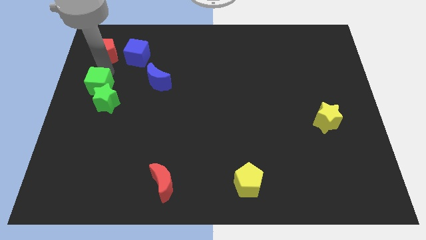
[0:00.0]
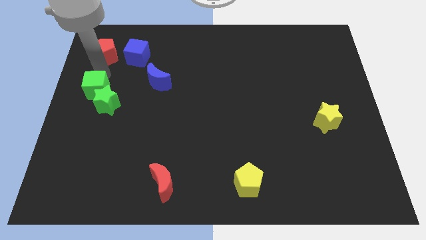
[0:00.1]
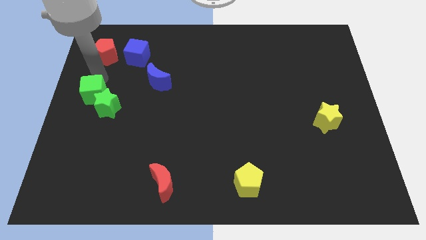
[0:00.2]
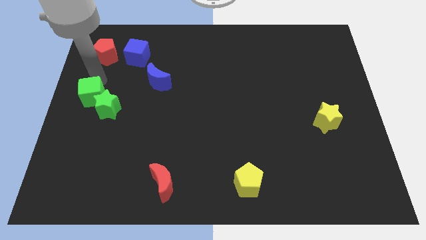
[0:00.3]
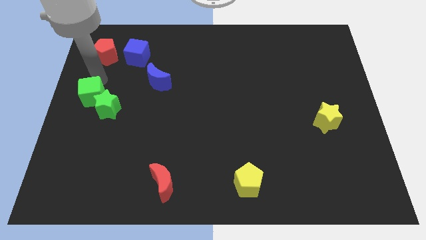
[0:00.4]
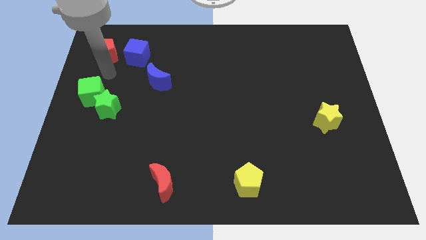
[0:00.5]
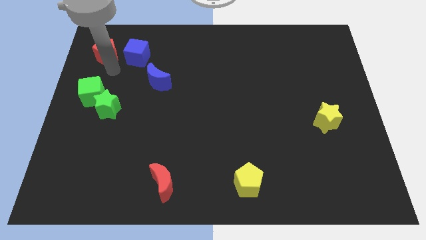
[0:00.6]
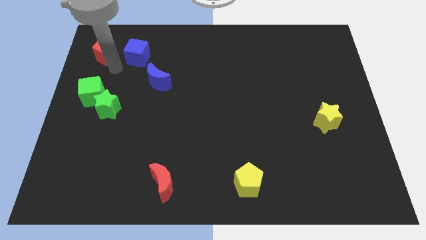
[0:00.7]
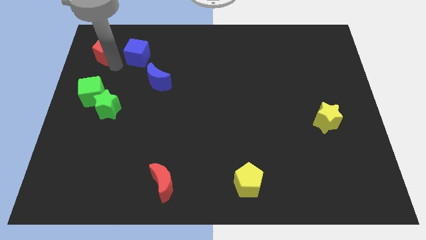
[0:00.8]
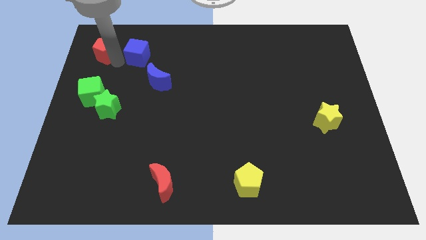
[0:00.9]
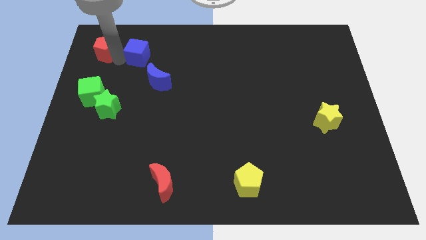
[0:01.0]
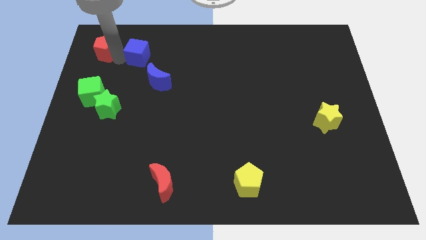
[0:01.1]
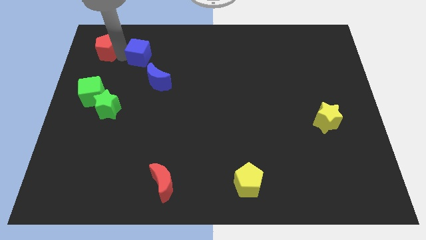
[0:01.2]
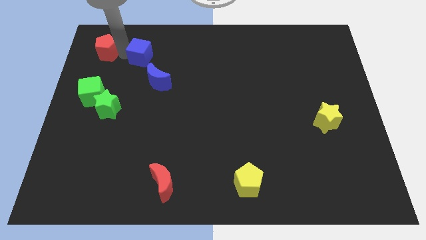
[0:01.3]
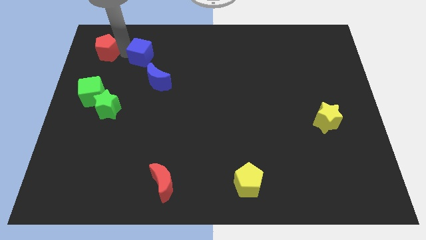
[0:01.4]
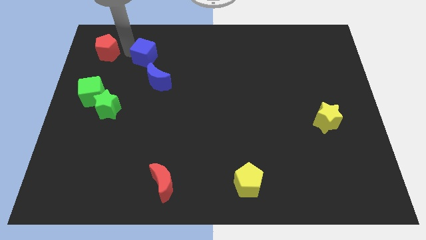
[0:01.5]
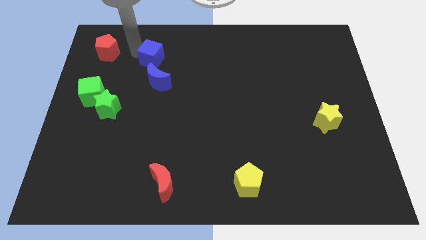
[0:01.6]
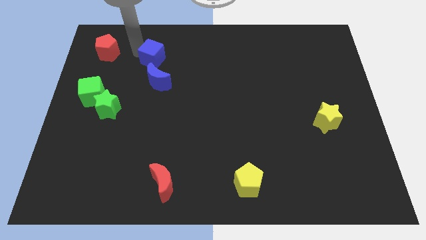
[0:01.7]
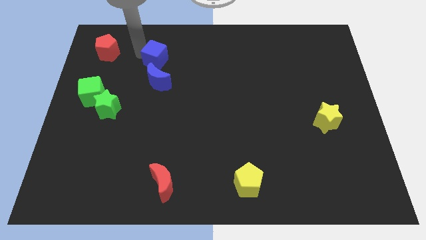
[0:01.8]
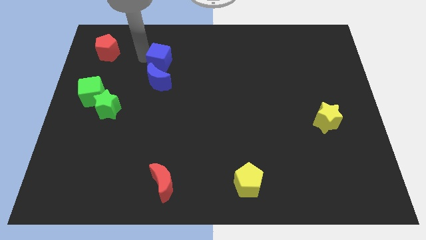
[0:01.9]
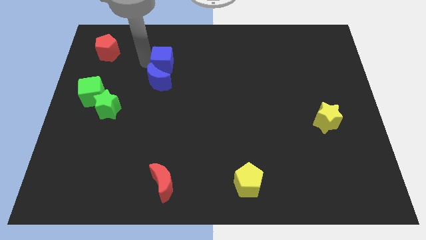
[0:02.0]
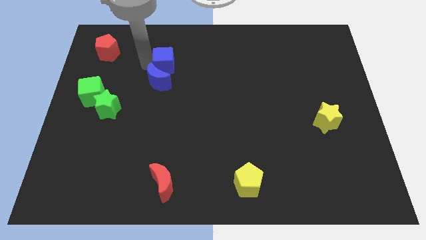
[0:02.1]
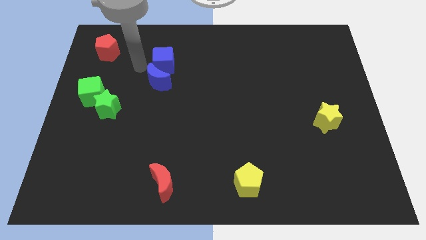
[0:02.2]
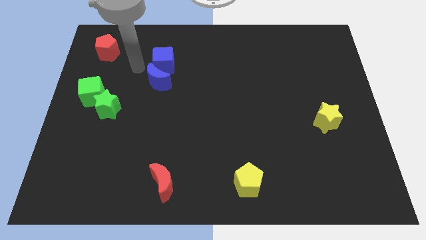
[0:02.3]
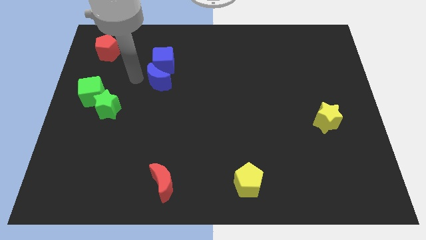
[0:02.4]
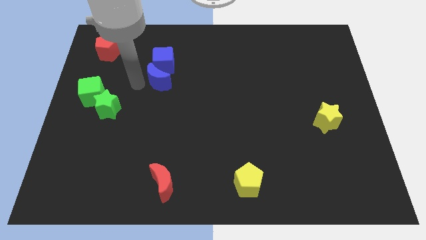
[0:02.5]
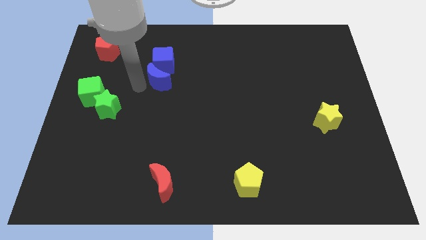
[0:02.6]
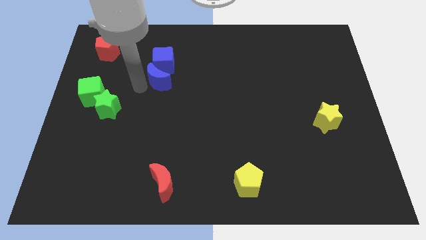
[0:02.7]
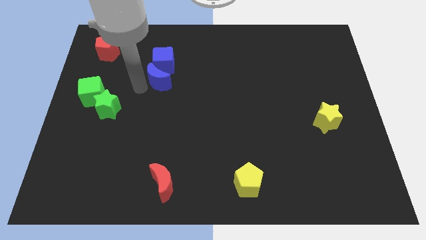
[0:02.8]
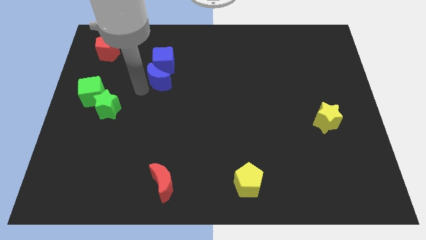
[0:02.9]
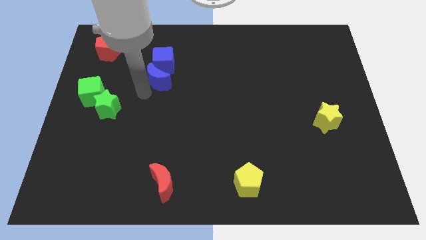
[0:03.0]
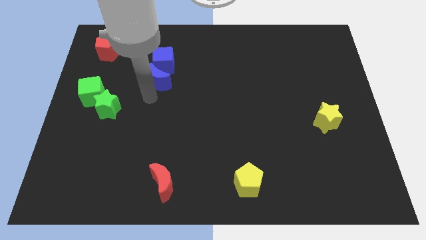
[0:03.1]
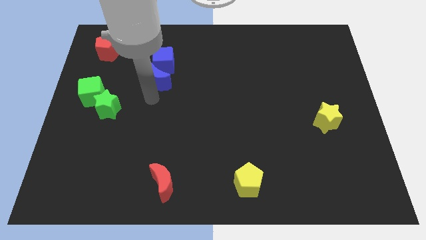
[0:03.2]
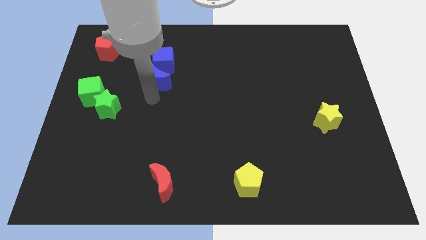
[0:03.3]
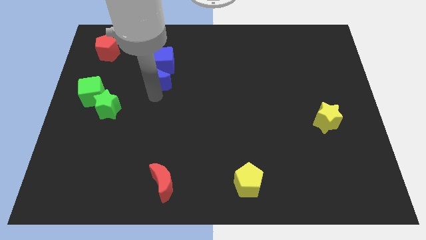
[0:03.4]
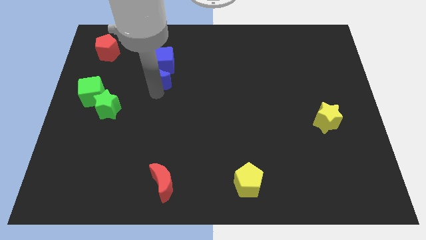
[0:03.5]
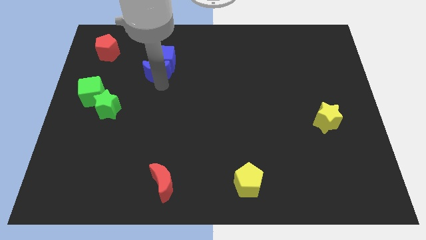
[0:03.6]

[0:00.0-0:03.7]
move the blue cube to the top side of the blue moon

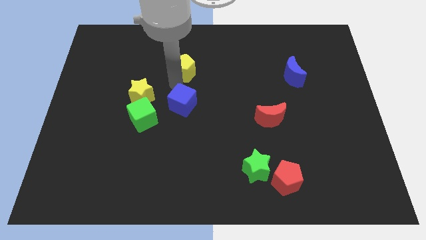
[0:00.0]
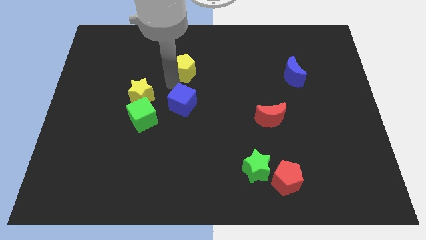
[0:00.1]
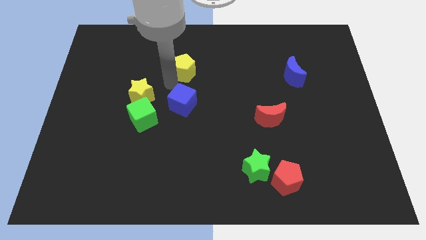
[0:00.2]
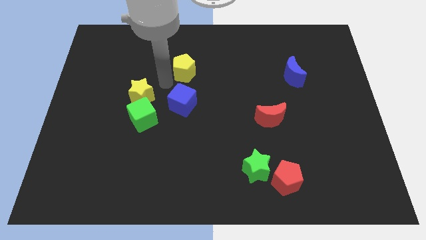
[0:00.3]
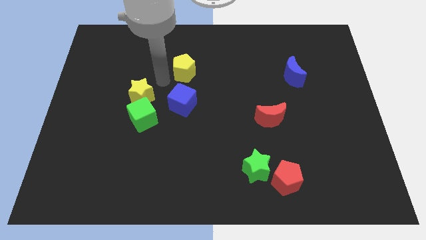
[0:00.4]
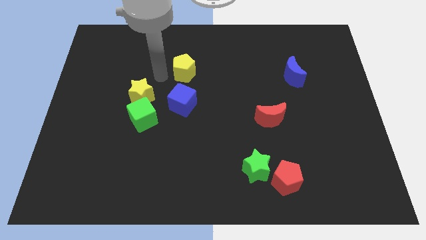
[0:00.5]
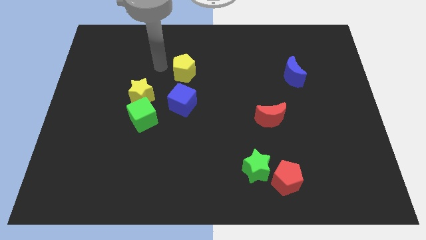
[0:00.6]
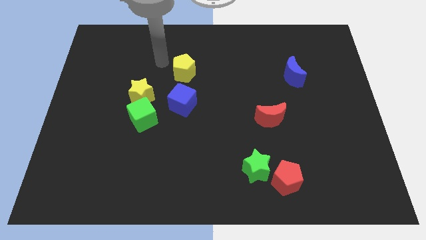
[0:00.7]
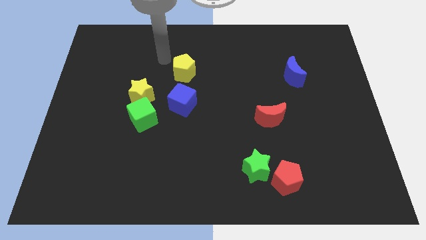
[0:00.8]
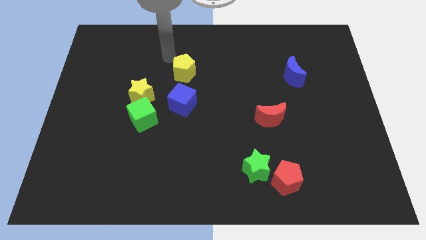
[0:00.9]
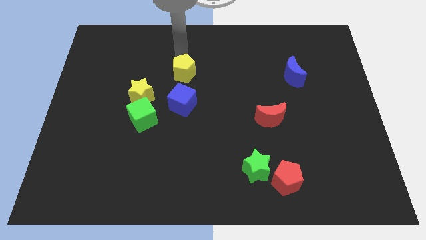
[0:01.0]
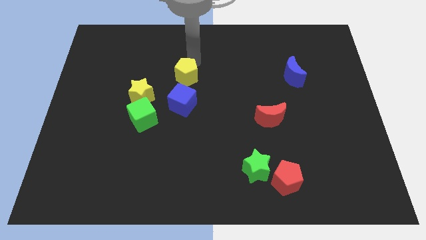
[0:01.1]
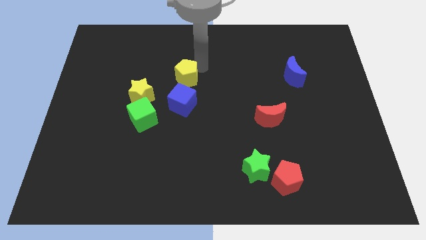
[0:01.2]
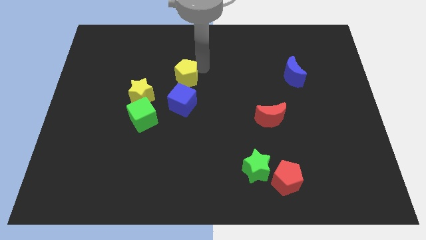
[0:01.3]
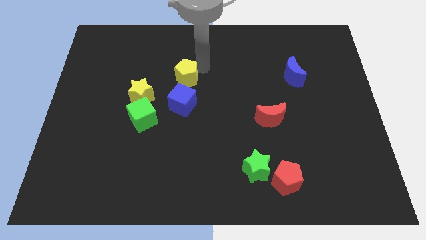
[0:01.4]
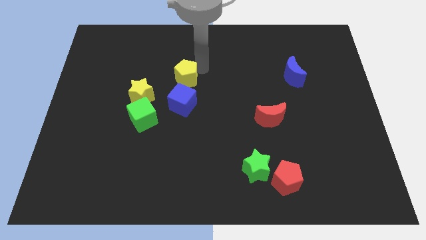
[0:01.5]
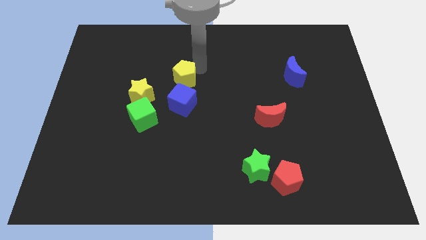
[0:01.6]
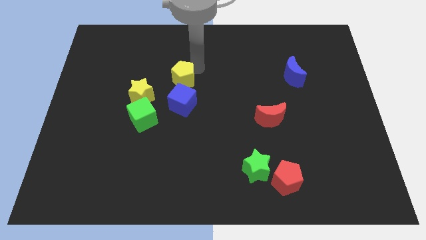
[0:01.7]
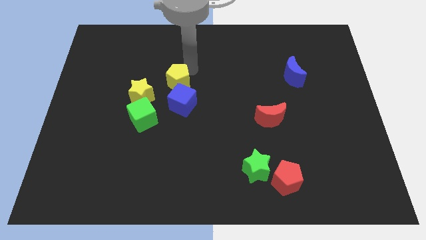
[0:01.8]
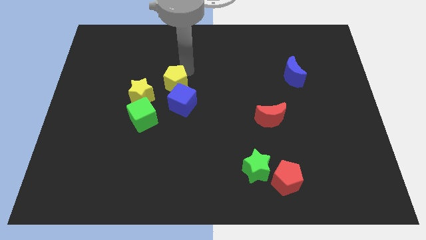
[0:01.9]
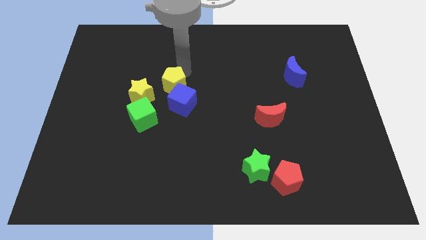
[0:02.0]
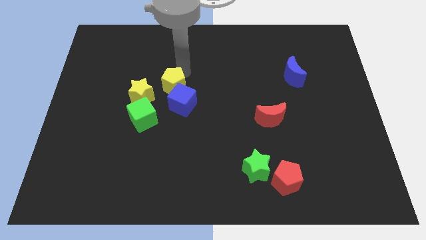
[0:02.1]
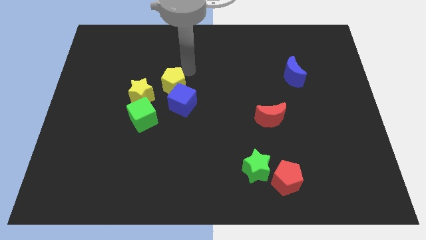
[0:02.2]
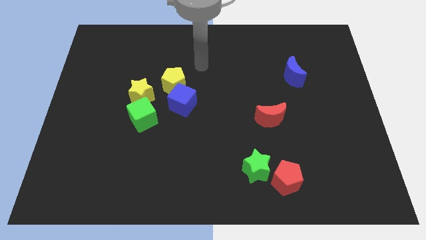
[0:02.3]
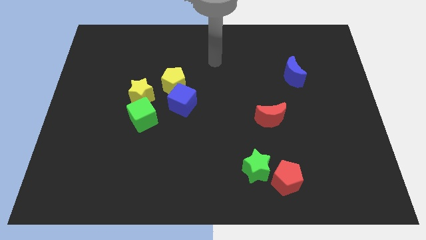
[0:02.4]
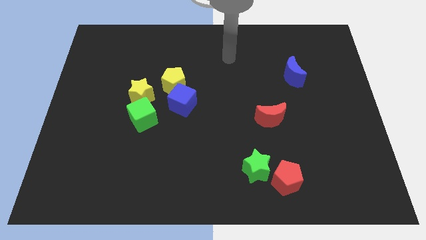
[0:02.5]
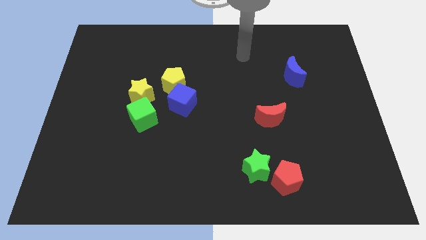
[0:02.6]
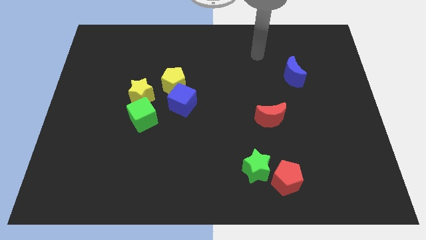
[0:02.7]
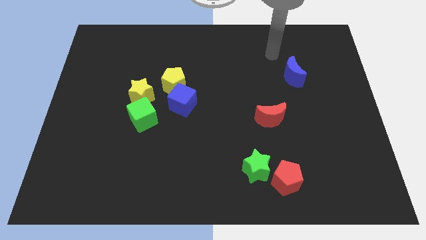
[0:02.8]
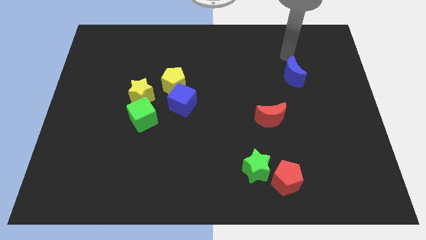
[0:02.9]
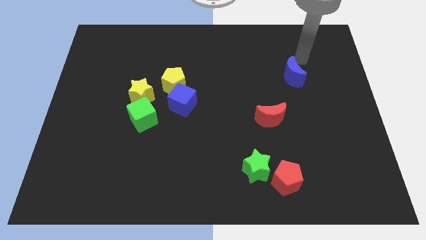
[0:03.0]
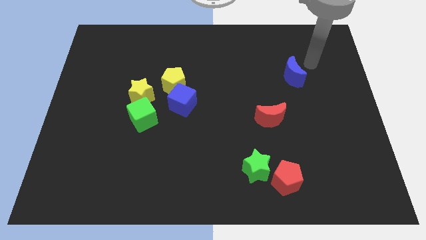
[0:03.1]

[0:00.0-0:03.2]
move the yellow pentagon to the top right of the yellow star

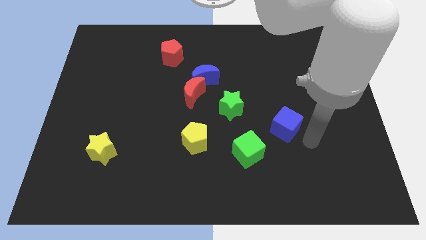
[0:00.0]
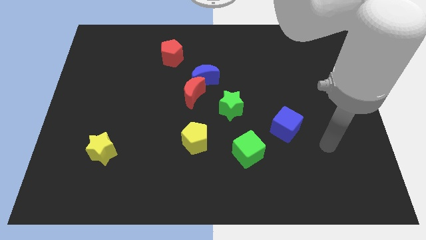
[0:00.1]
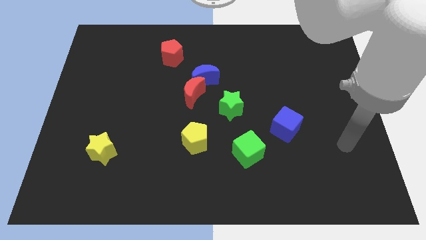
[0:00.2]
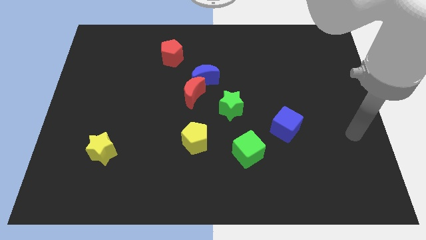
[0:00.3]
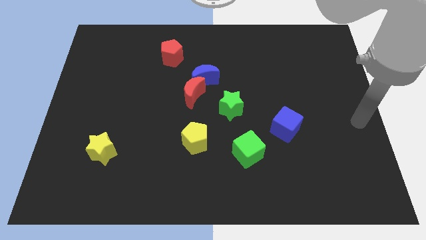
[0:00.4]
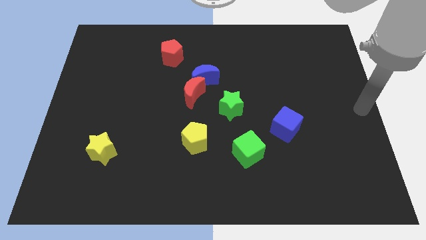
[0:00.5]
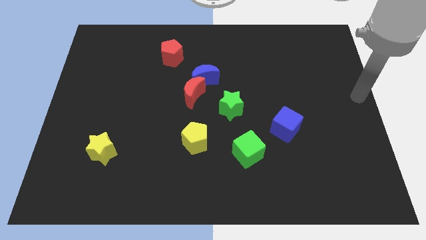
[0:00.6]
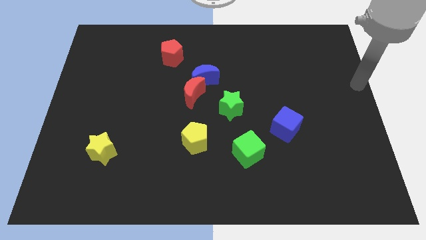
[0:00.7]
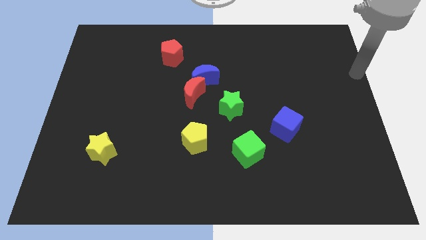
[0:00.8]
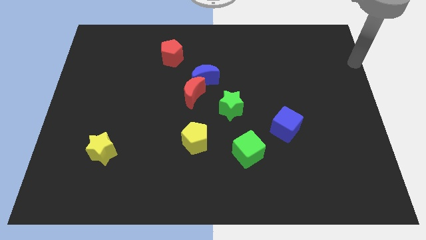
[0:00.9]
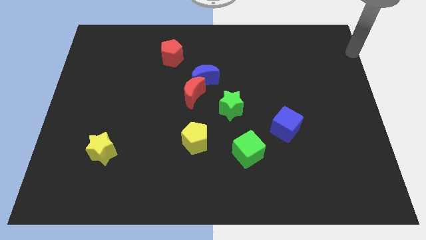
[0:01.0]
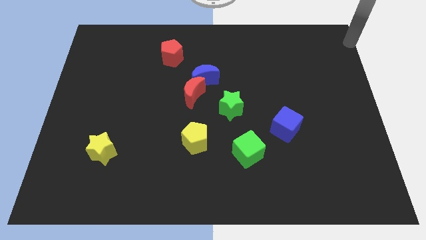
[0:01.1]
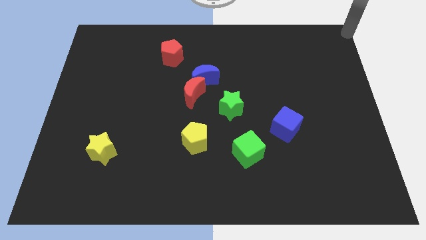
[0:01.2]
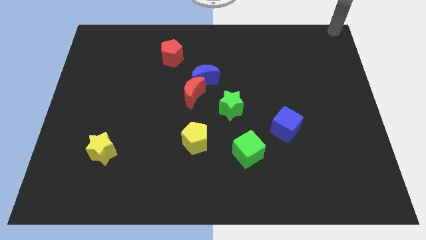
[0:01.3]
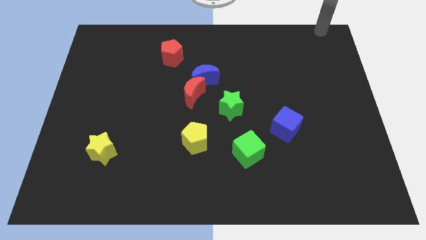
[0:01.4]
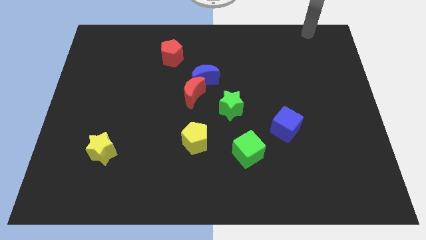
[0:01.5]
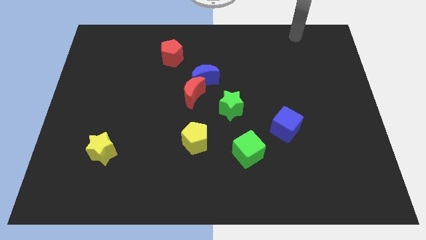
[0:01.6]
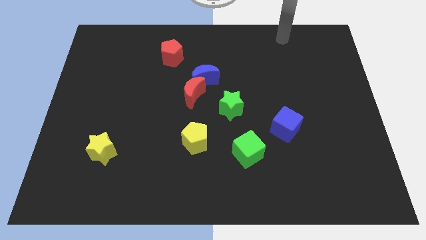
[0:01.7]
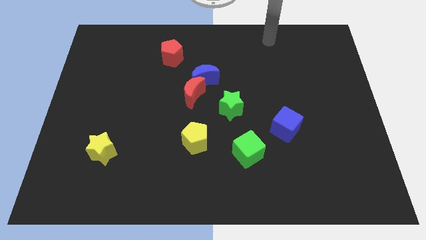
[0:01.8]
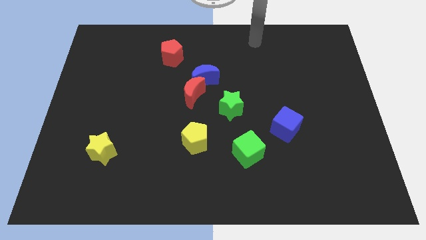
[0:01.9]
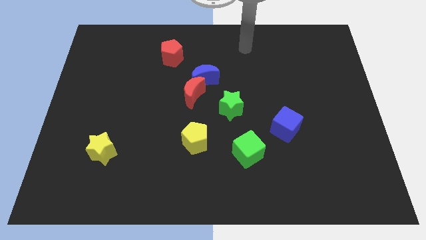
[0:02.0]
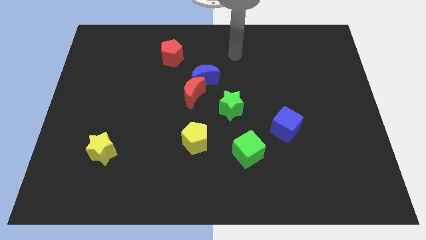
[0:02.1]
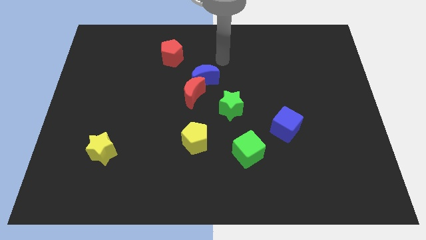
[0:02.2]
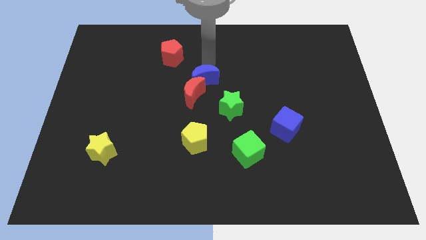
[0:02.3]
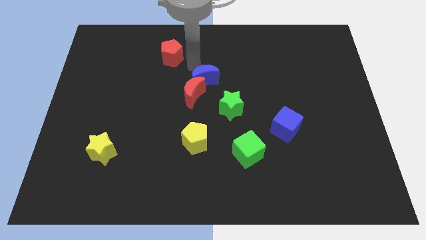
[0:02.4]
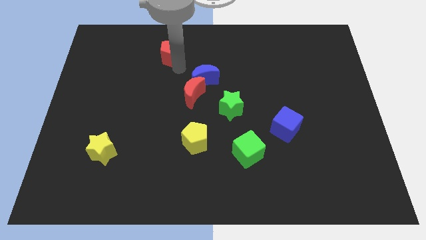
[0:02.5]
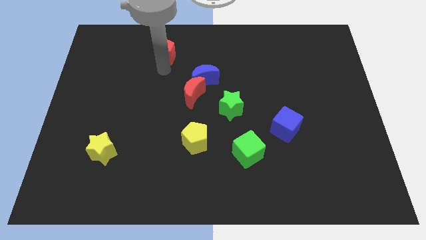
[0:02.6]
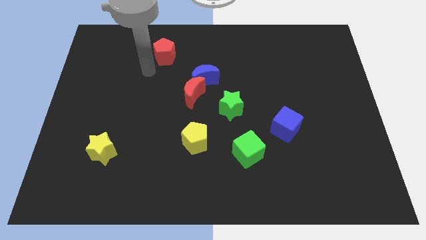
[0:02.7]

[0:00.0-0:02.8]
move your arm to the bottom of red pentagon
